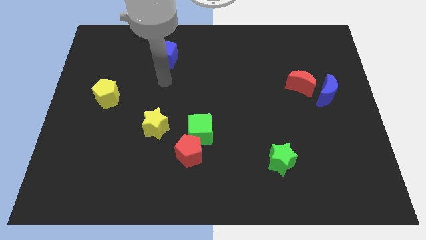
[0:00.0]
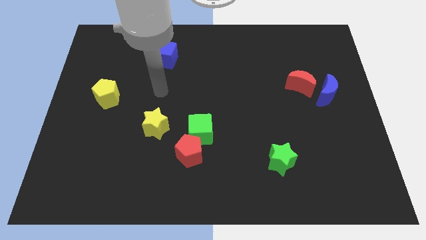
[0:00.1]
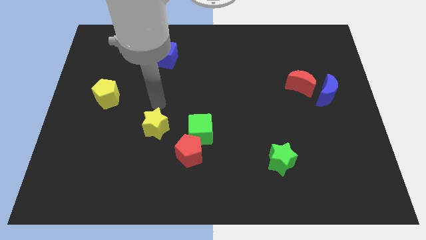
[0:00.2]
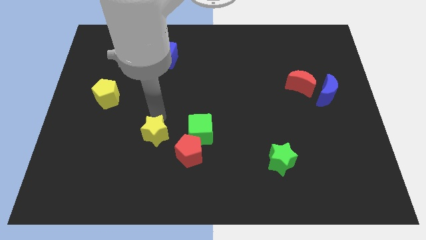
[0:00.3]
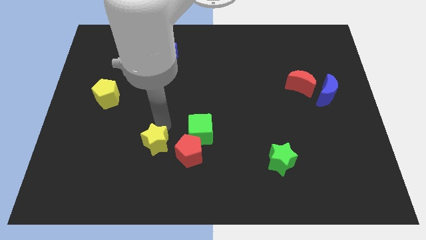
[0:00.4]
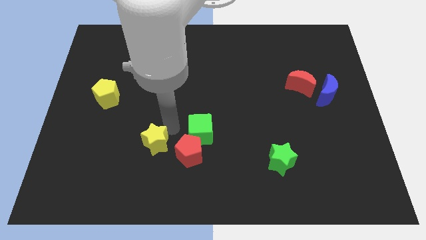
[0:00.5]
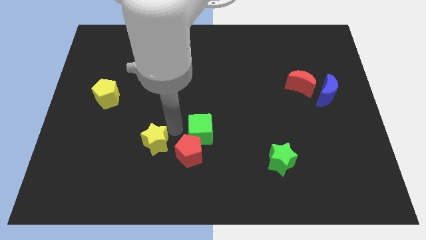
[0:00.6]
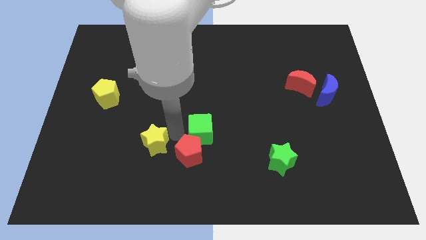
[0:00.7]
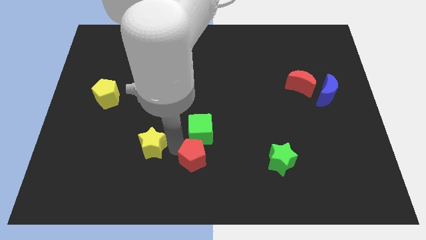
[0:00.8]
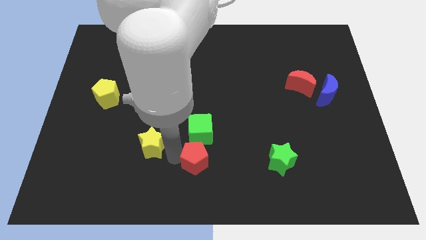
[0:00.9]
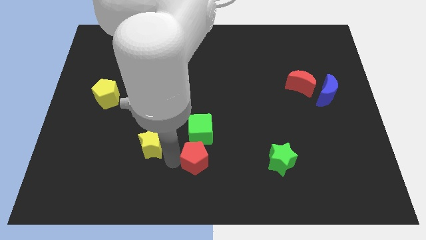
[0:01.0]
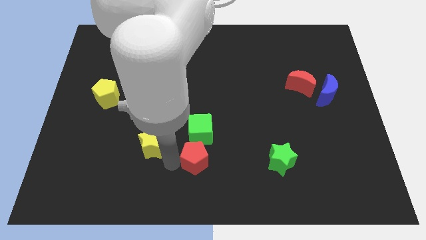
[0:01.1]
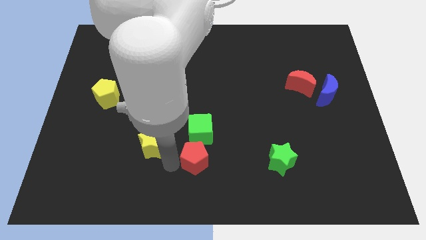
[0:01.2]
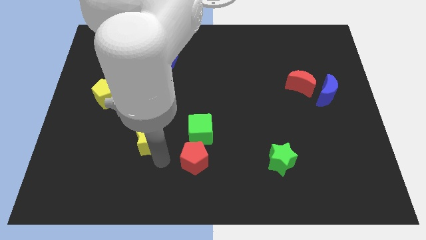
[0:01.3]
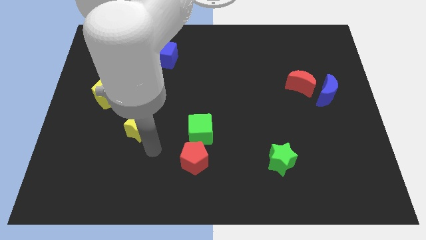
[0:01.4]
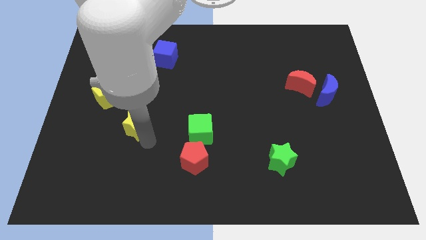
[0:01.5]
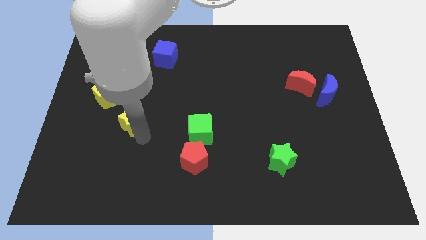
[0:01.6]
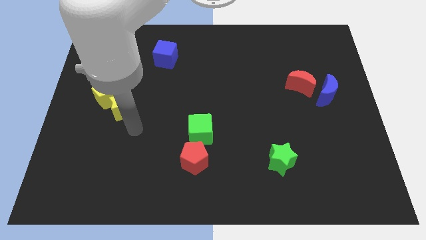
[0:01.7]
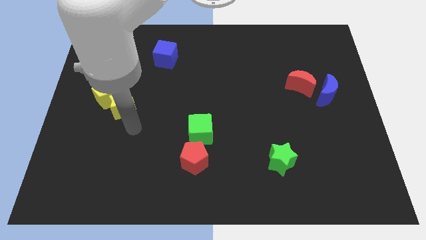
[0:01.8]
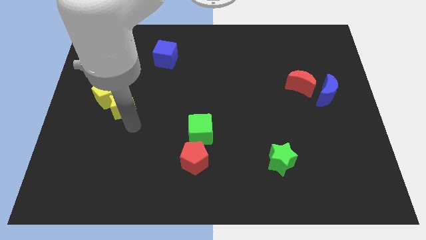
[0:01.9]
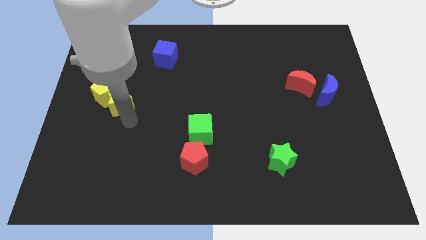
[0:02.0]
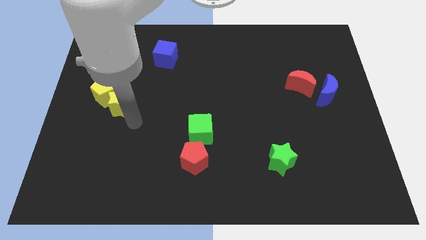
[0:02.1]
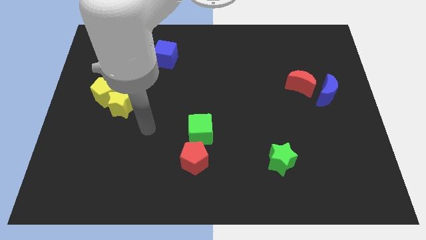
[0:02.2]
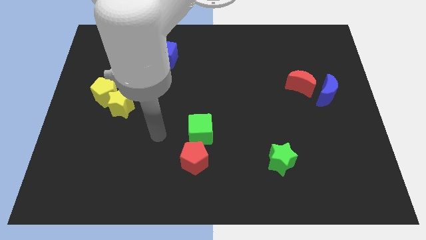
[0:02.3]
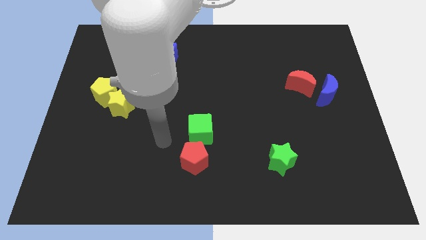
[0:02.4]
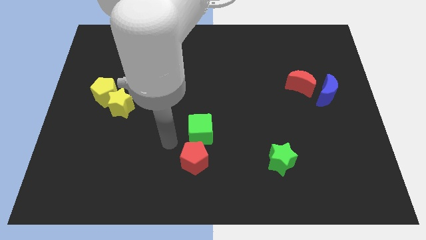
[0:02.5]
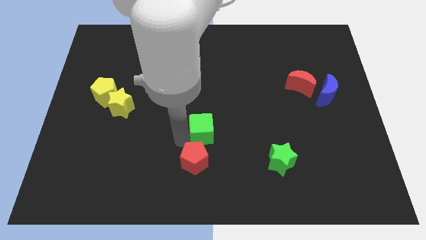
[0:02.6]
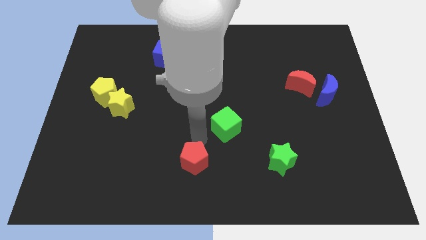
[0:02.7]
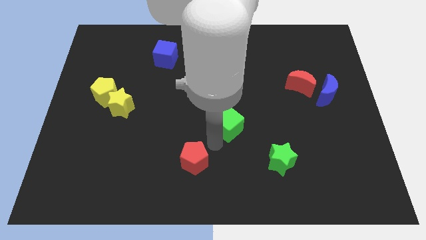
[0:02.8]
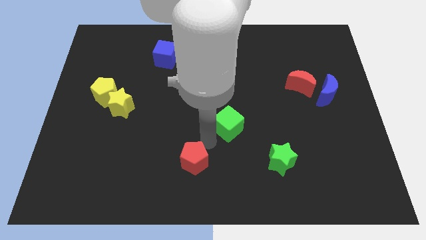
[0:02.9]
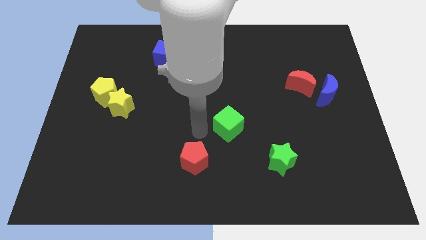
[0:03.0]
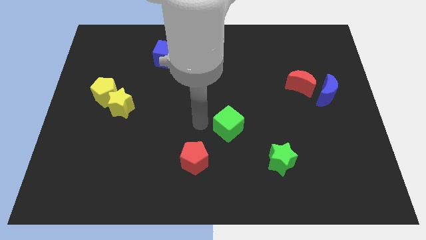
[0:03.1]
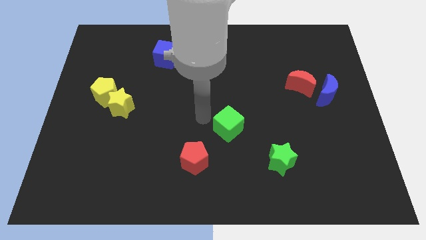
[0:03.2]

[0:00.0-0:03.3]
move yellow star close to yellow pentagon

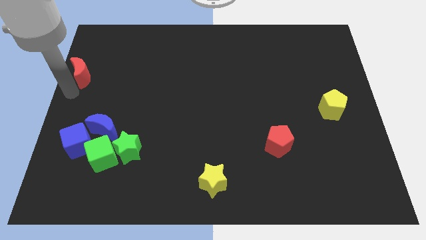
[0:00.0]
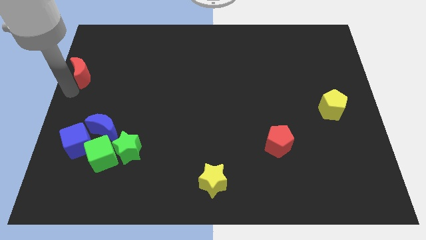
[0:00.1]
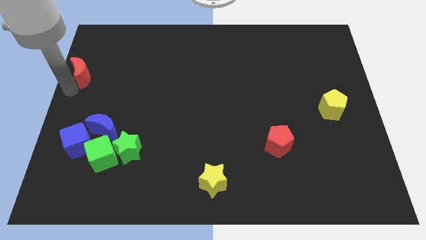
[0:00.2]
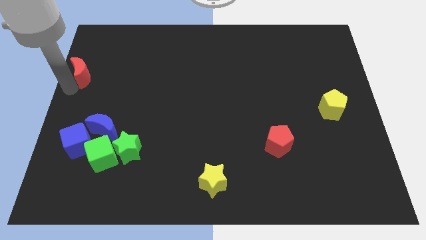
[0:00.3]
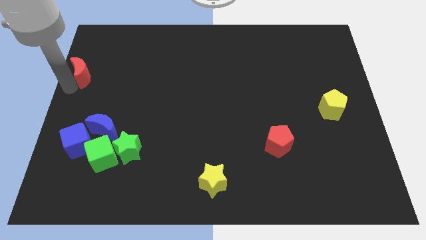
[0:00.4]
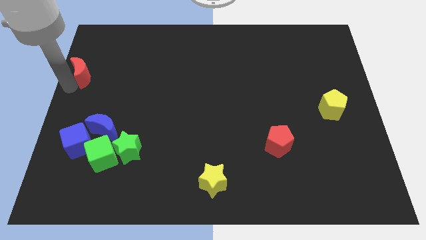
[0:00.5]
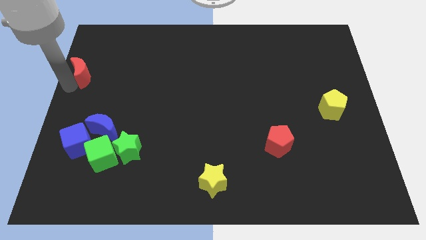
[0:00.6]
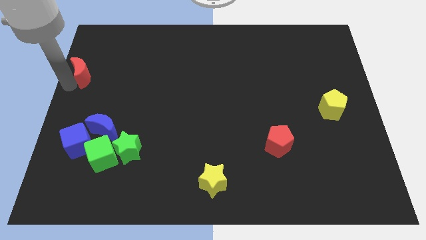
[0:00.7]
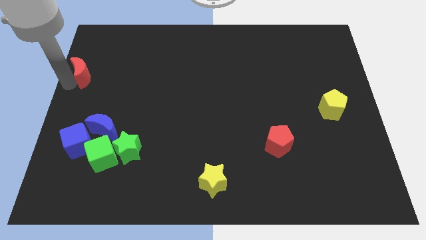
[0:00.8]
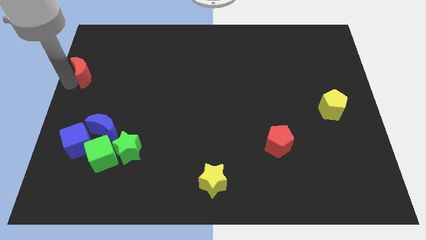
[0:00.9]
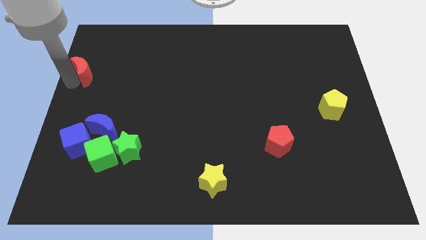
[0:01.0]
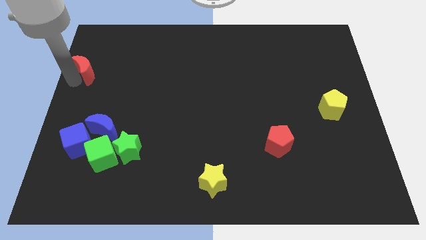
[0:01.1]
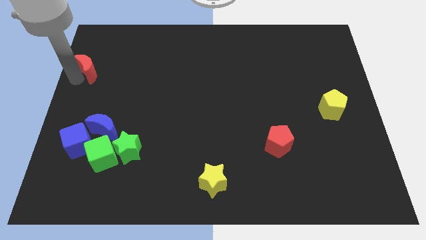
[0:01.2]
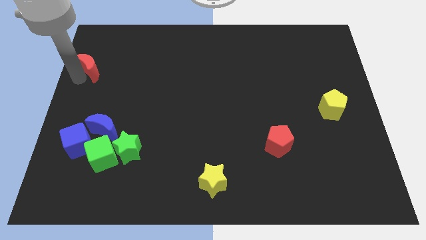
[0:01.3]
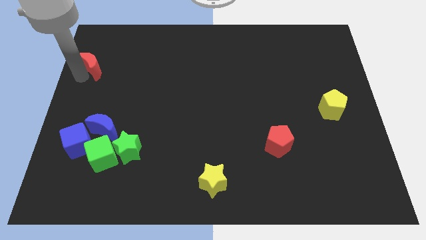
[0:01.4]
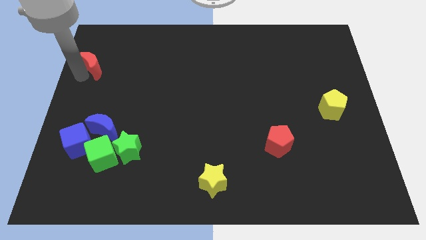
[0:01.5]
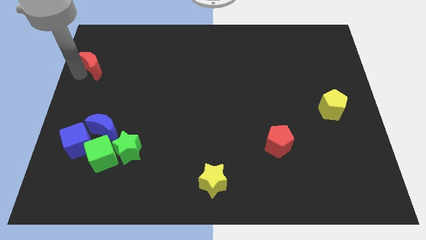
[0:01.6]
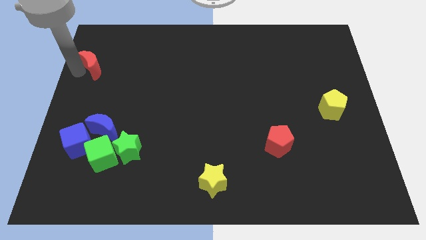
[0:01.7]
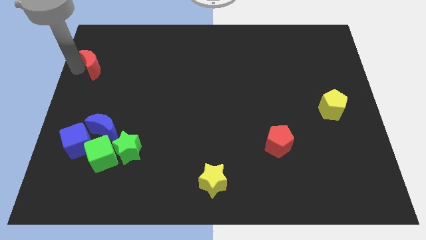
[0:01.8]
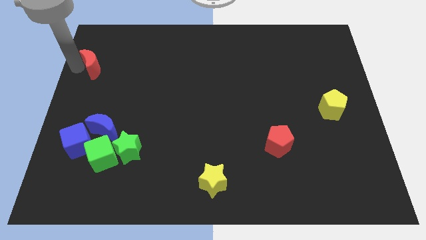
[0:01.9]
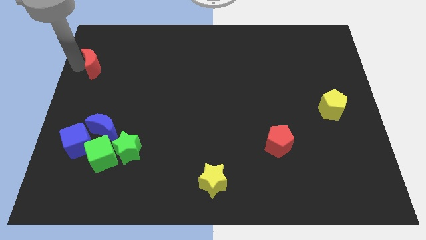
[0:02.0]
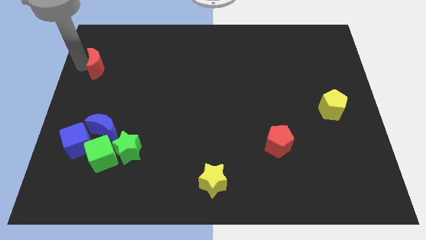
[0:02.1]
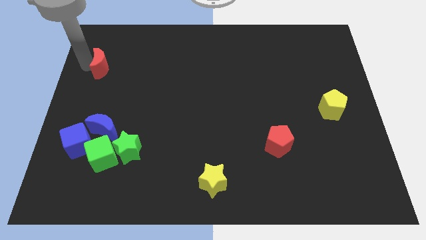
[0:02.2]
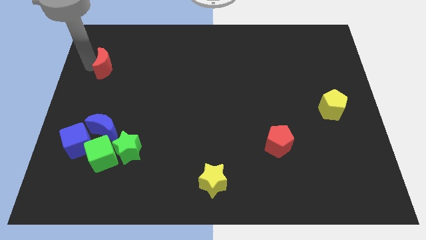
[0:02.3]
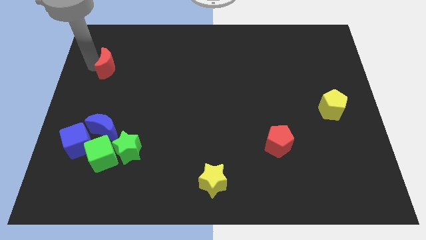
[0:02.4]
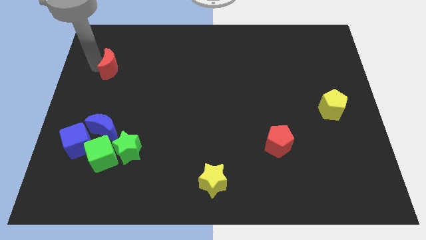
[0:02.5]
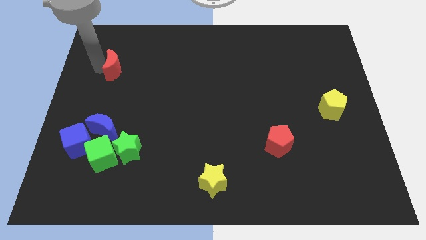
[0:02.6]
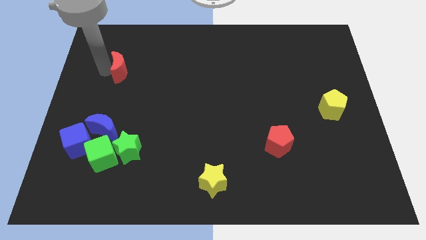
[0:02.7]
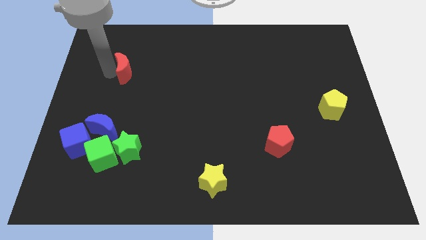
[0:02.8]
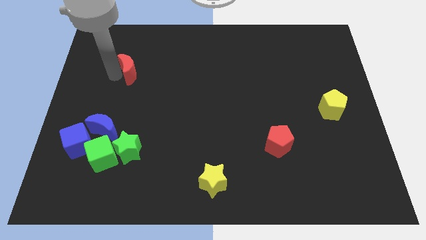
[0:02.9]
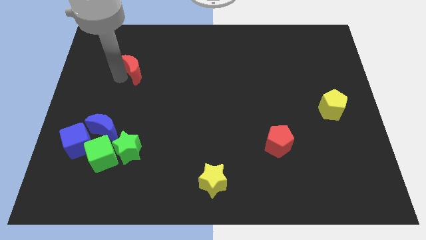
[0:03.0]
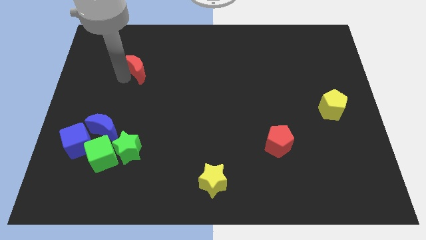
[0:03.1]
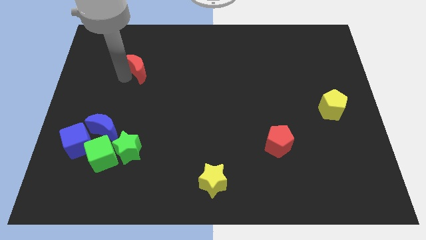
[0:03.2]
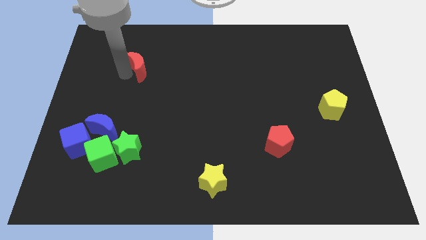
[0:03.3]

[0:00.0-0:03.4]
move the red crescent towards right
